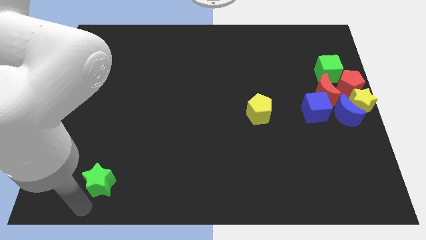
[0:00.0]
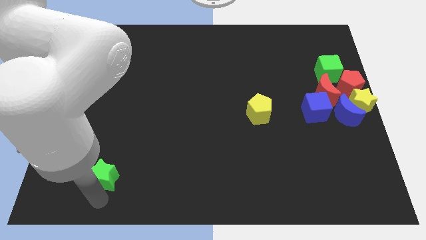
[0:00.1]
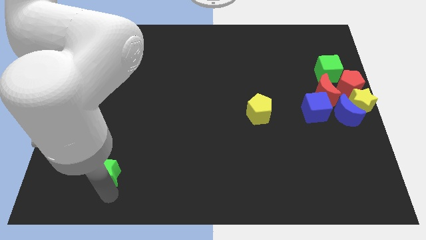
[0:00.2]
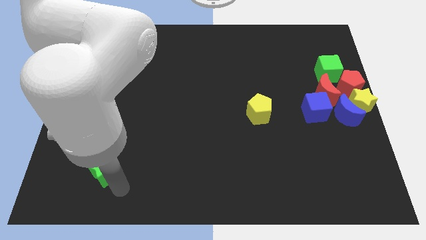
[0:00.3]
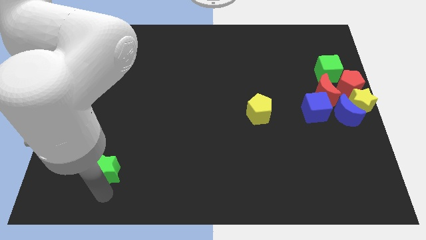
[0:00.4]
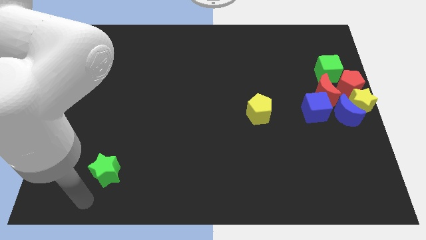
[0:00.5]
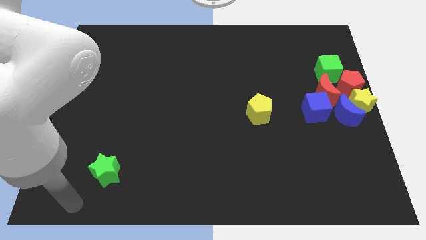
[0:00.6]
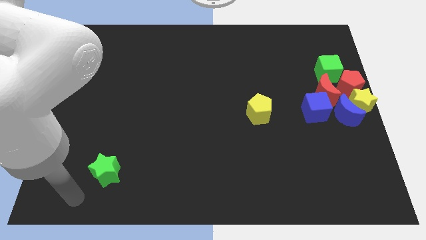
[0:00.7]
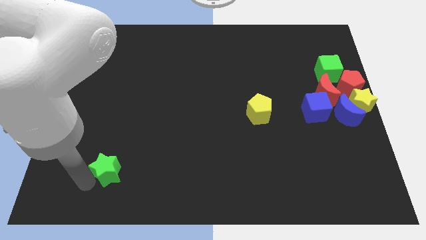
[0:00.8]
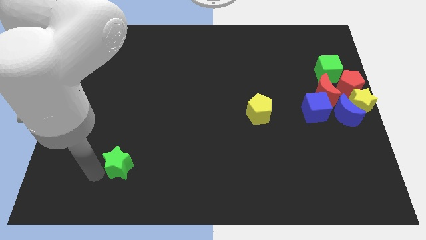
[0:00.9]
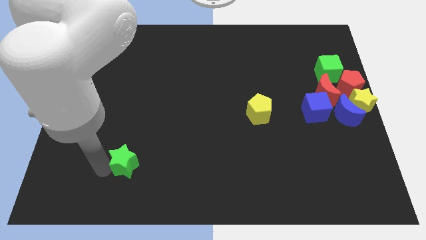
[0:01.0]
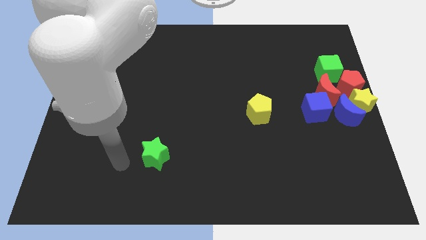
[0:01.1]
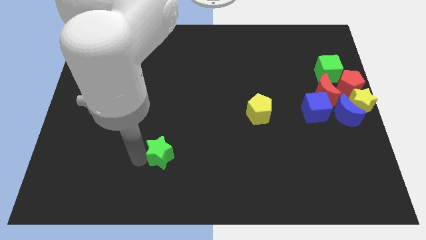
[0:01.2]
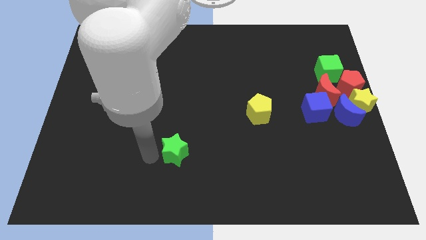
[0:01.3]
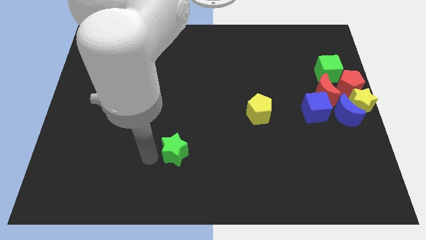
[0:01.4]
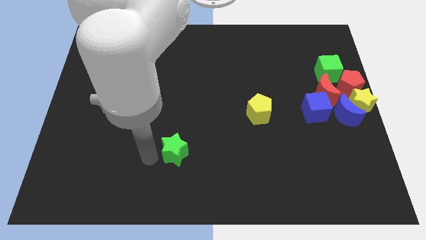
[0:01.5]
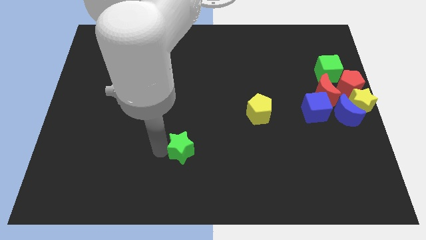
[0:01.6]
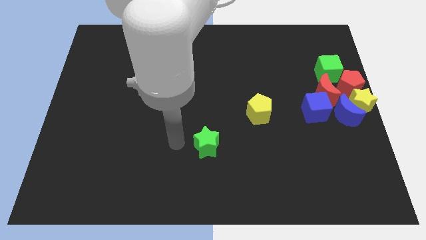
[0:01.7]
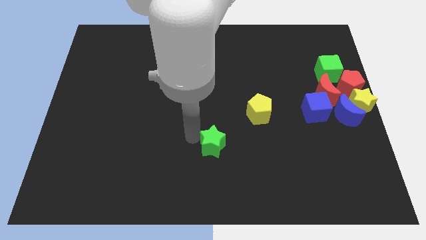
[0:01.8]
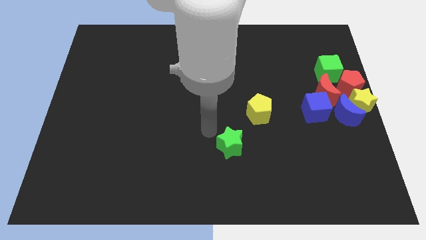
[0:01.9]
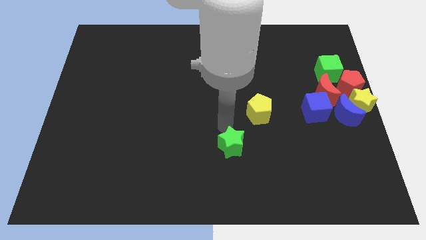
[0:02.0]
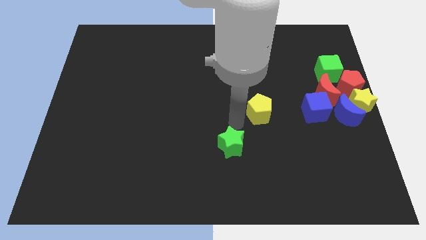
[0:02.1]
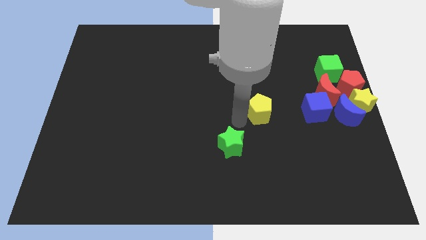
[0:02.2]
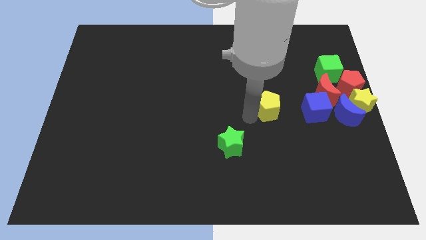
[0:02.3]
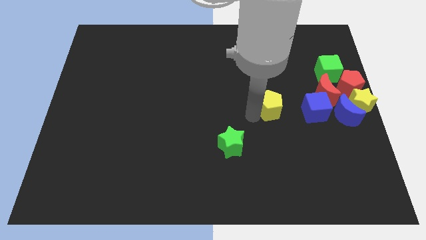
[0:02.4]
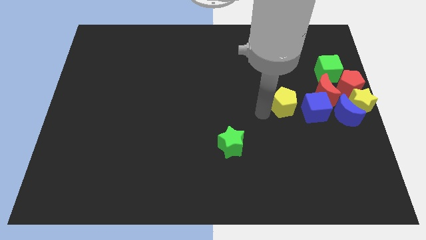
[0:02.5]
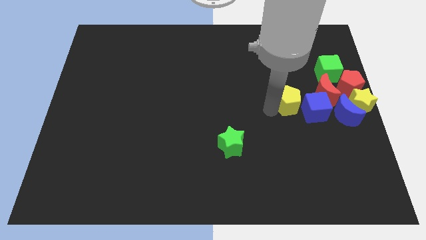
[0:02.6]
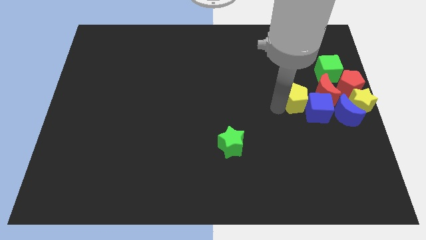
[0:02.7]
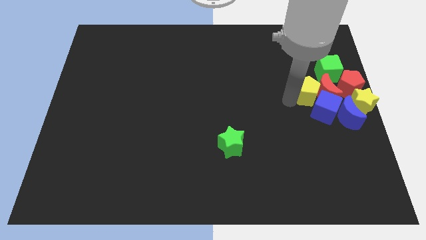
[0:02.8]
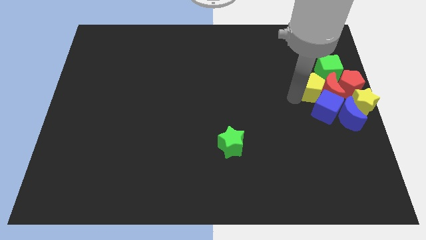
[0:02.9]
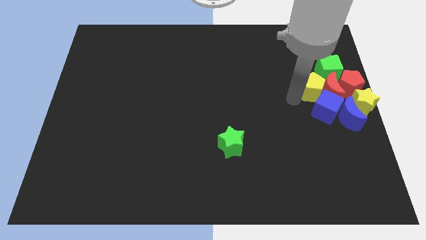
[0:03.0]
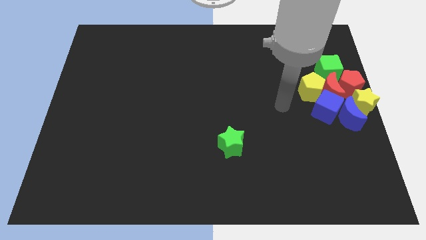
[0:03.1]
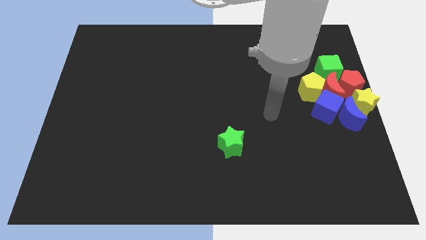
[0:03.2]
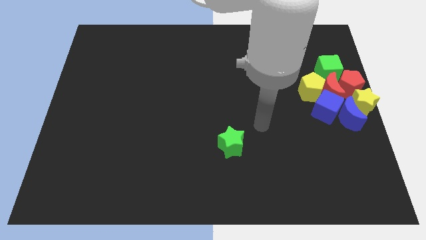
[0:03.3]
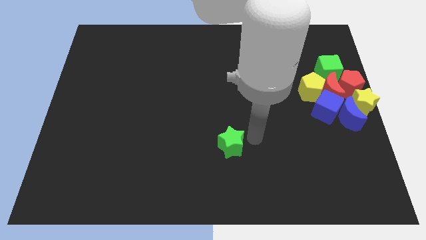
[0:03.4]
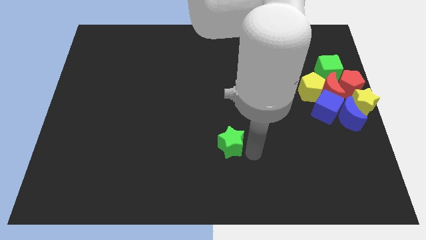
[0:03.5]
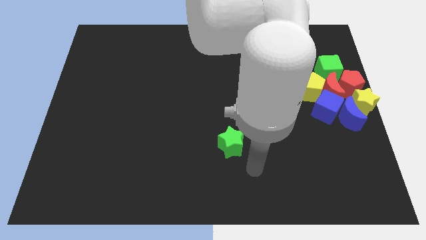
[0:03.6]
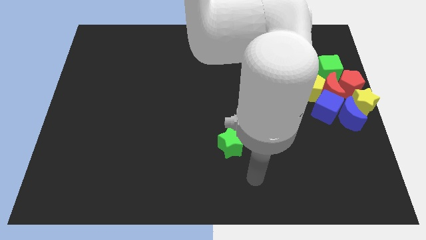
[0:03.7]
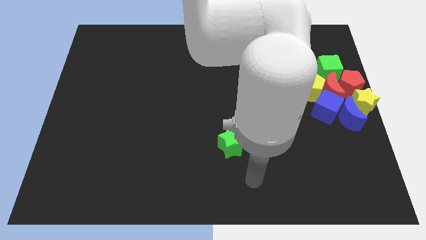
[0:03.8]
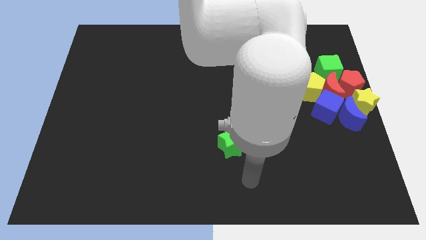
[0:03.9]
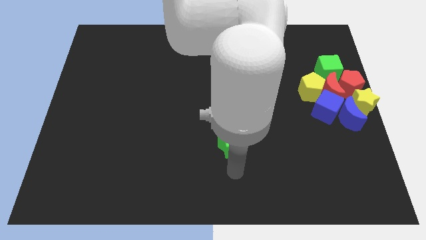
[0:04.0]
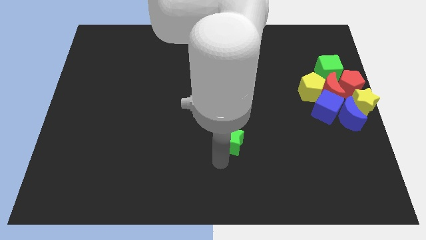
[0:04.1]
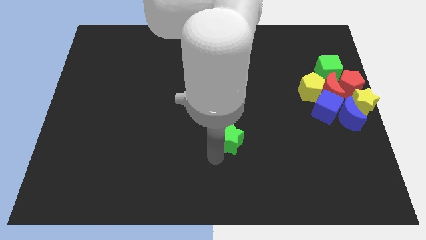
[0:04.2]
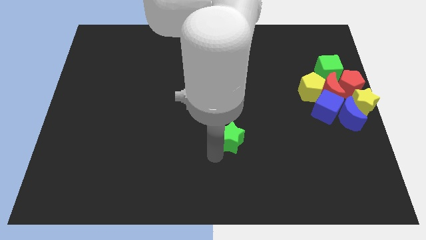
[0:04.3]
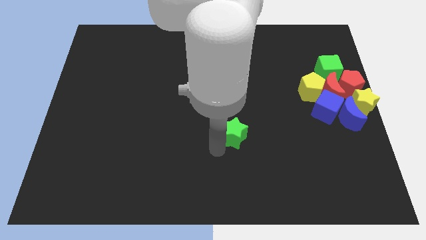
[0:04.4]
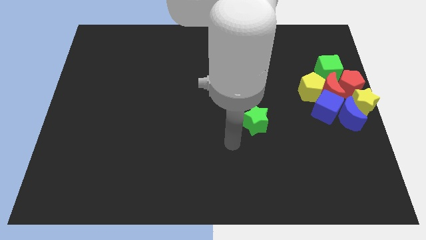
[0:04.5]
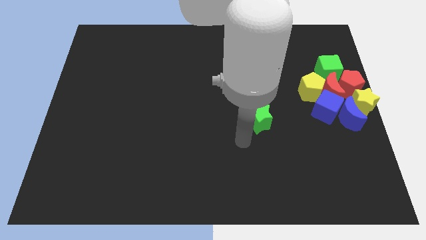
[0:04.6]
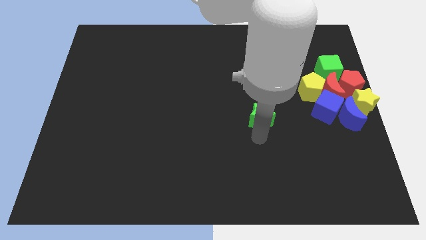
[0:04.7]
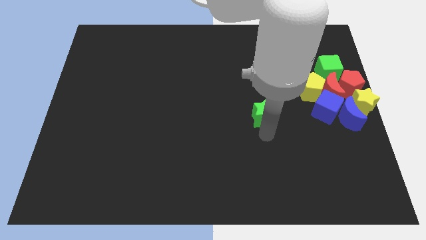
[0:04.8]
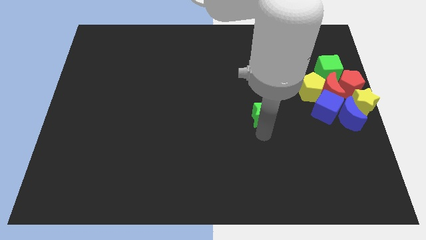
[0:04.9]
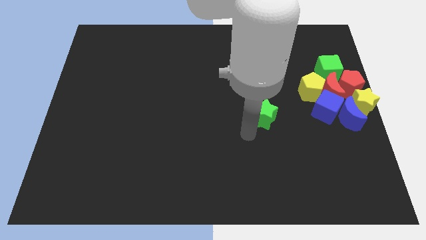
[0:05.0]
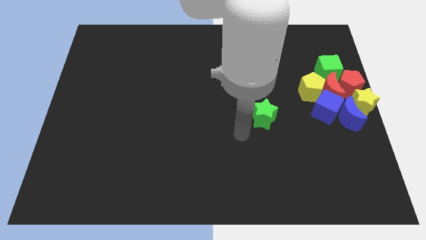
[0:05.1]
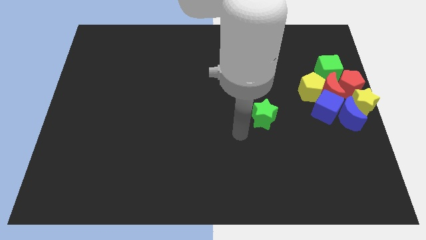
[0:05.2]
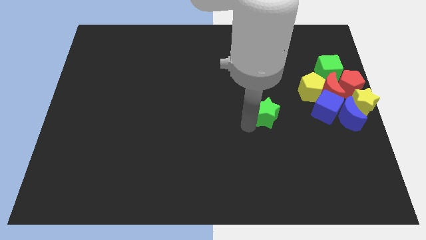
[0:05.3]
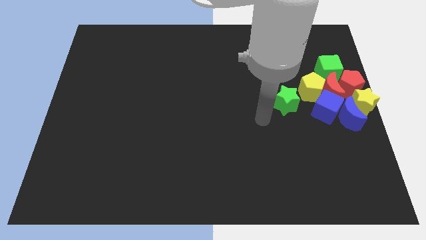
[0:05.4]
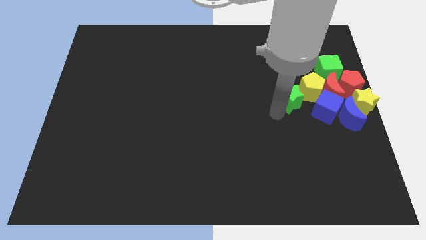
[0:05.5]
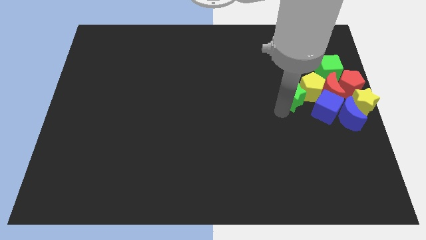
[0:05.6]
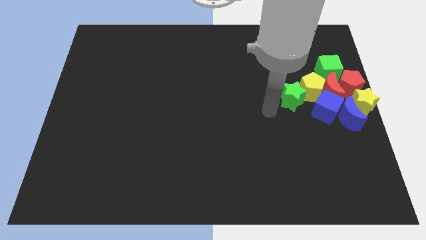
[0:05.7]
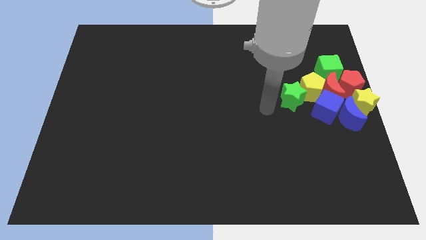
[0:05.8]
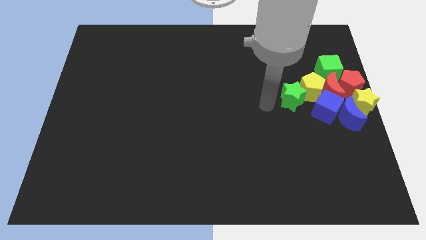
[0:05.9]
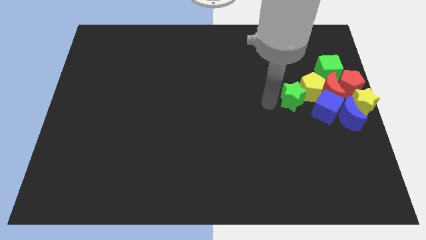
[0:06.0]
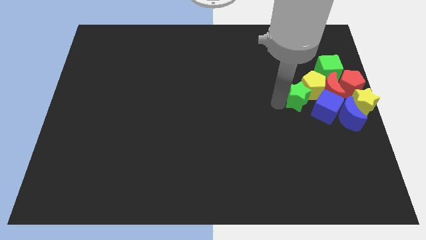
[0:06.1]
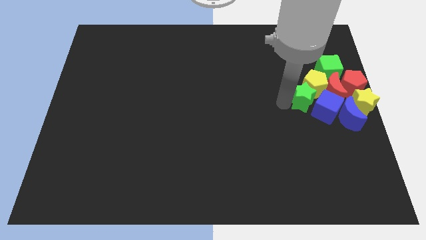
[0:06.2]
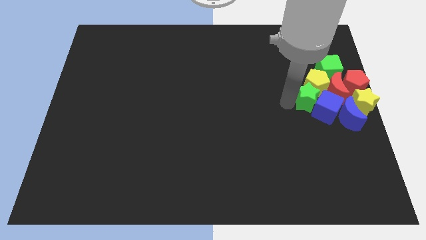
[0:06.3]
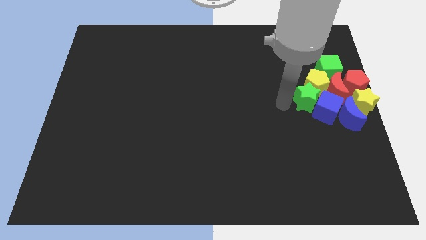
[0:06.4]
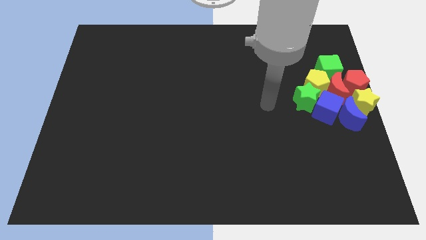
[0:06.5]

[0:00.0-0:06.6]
push the green star into the yellow pentagon

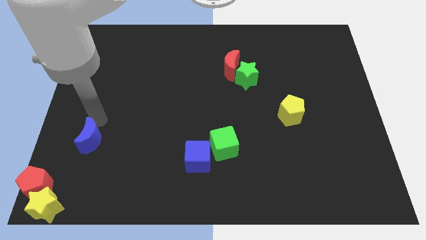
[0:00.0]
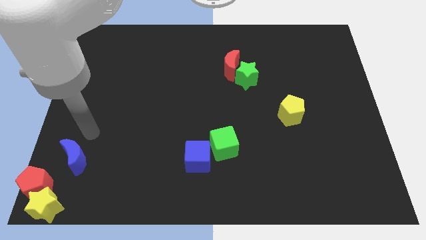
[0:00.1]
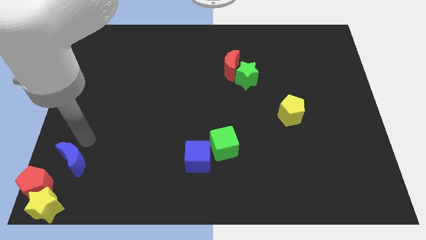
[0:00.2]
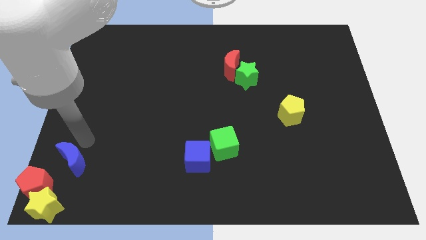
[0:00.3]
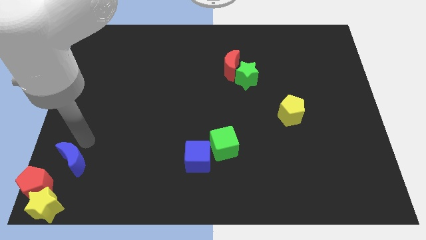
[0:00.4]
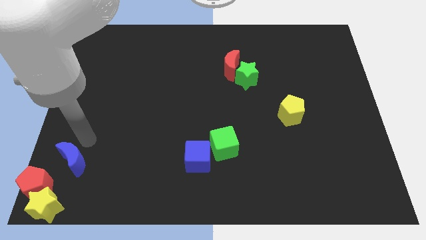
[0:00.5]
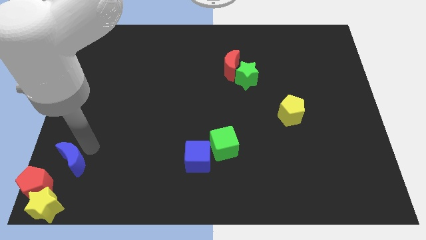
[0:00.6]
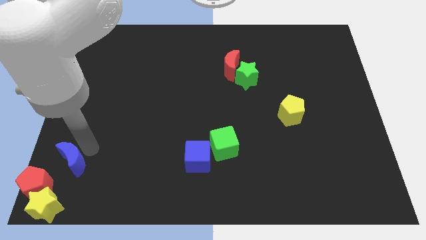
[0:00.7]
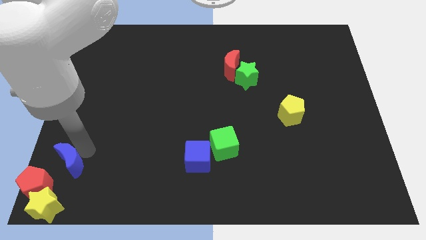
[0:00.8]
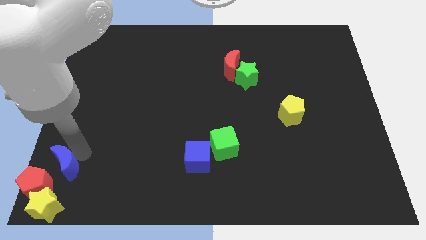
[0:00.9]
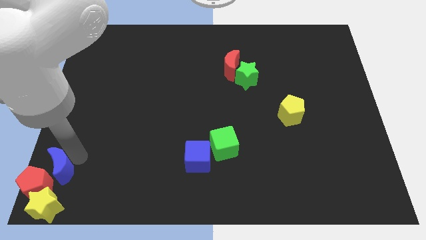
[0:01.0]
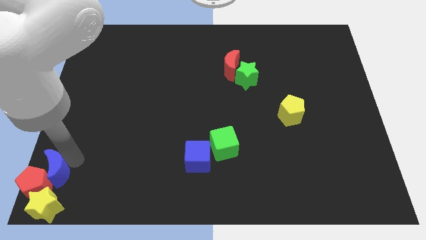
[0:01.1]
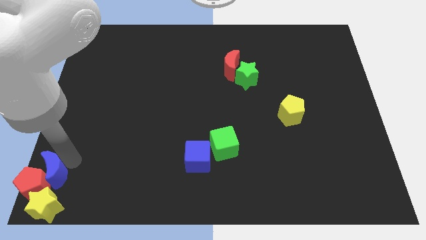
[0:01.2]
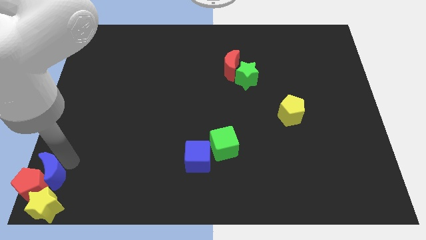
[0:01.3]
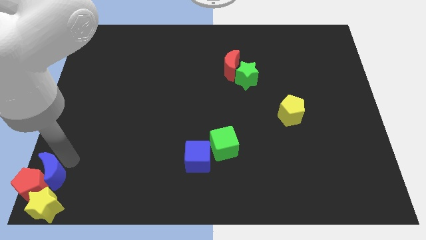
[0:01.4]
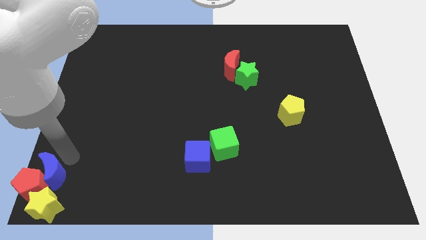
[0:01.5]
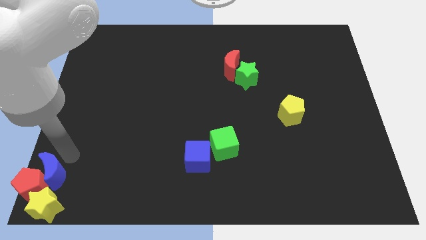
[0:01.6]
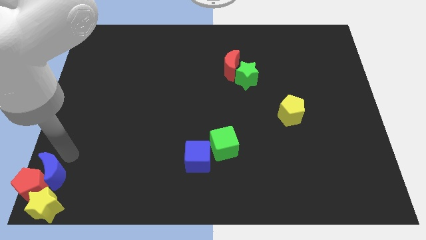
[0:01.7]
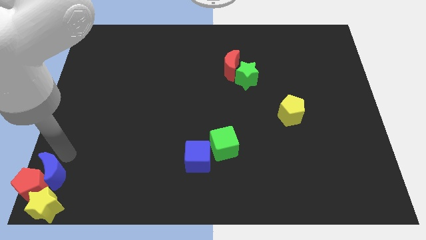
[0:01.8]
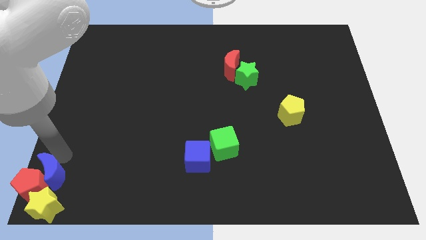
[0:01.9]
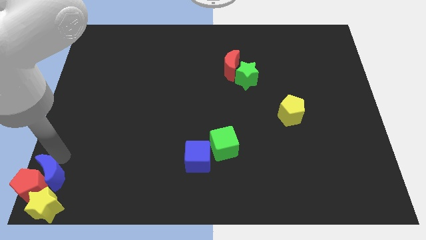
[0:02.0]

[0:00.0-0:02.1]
push the blue moon into red pentagon

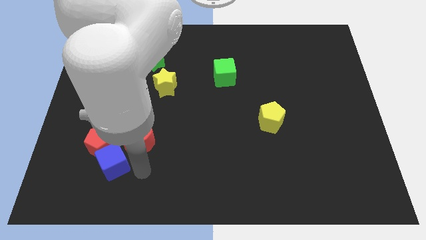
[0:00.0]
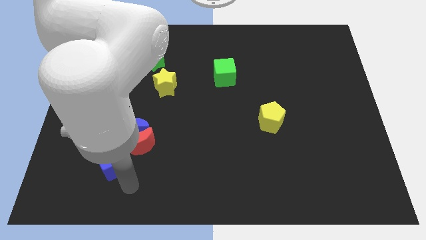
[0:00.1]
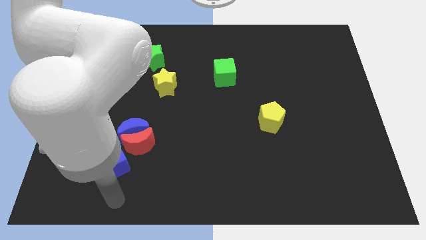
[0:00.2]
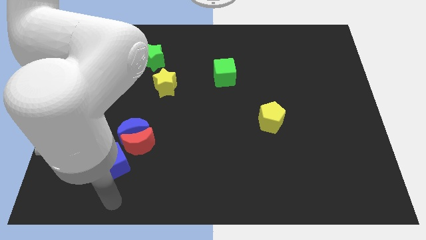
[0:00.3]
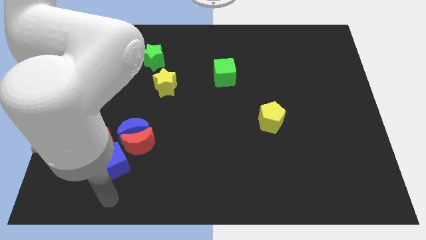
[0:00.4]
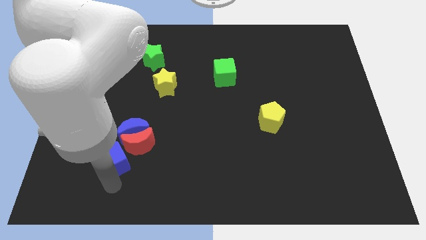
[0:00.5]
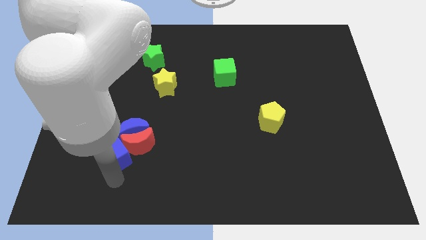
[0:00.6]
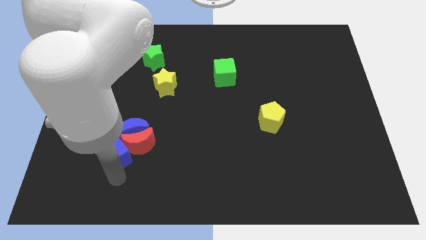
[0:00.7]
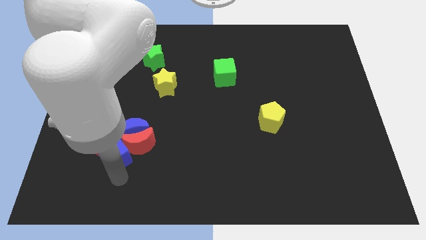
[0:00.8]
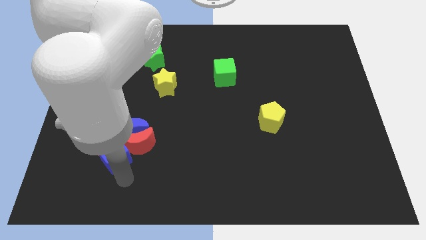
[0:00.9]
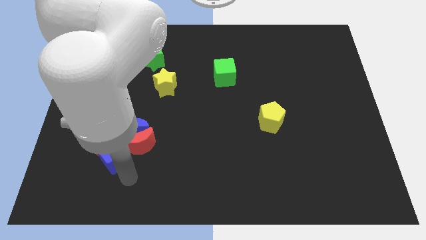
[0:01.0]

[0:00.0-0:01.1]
push the blue cube upwards slightly
